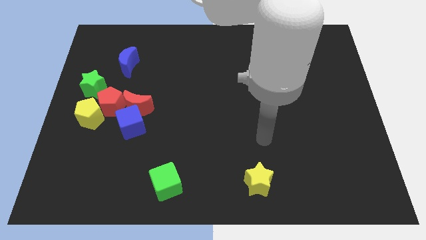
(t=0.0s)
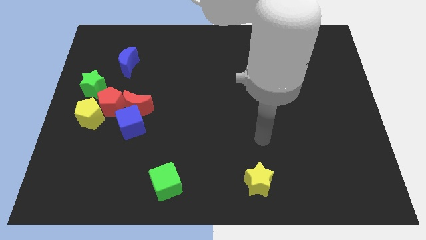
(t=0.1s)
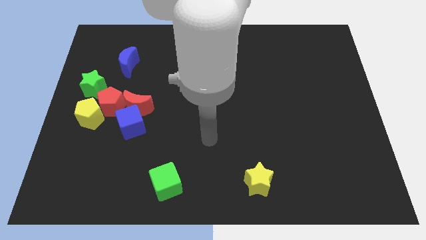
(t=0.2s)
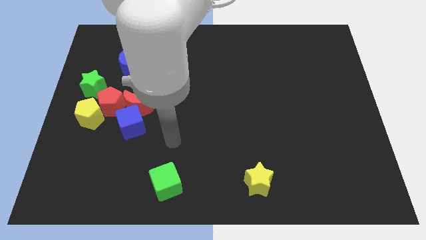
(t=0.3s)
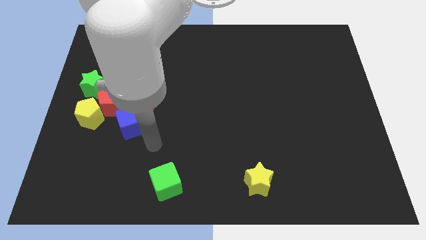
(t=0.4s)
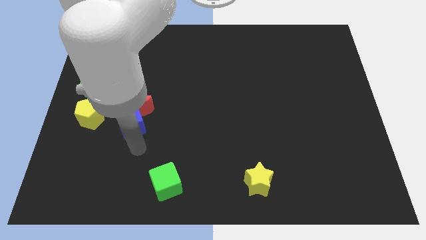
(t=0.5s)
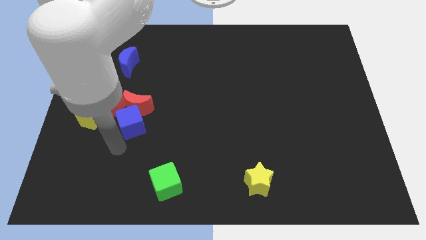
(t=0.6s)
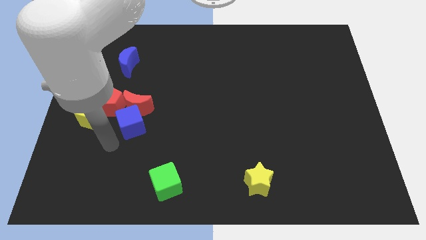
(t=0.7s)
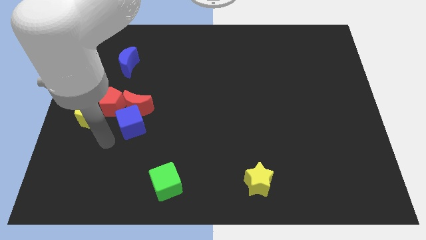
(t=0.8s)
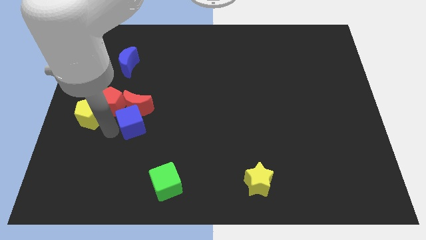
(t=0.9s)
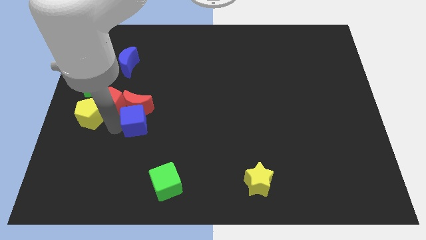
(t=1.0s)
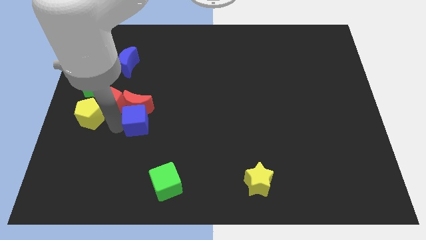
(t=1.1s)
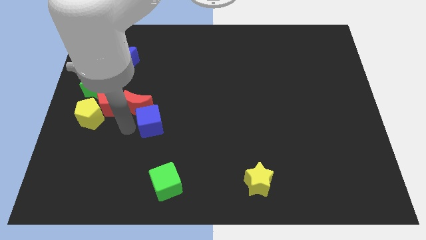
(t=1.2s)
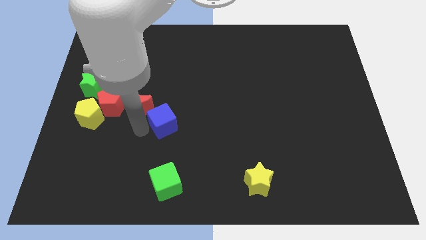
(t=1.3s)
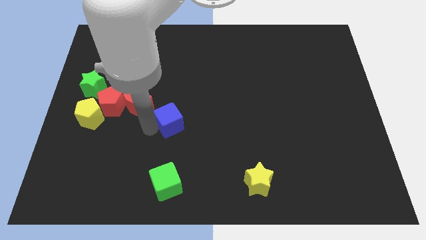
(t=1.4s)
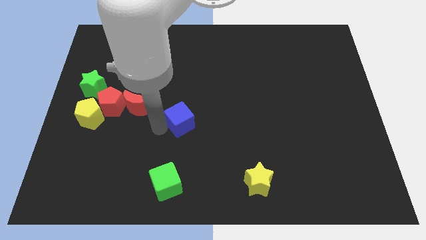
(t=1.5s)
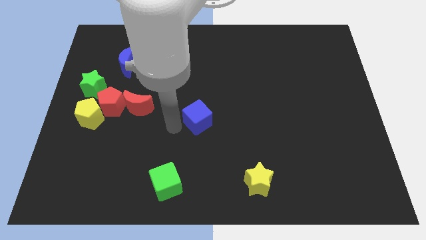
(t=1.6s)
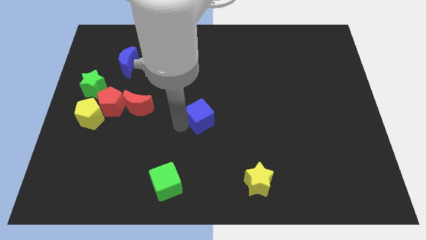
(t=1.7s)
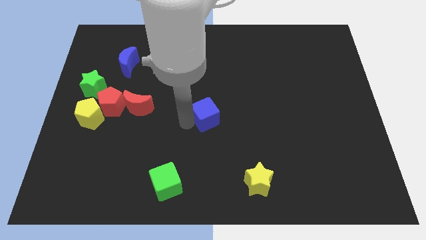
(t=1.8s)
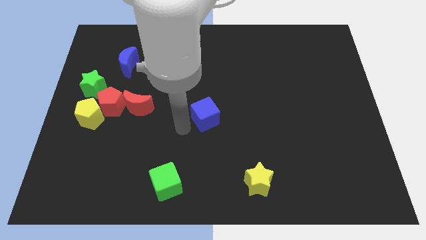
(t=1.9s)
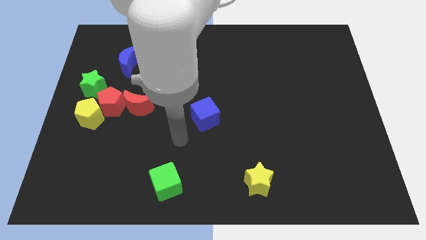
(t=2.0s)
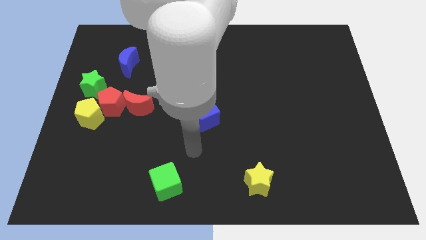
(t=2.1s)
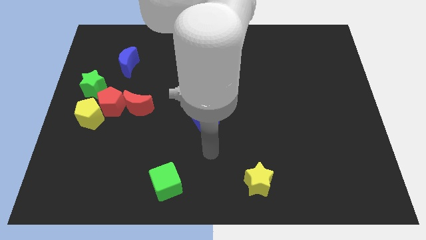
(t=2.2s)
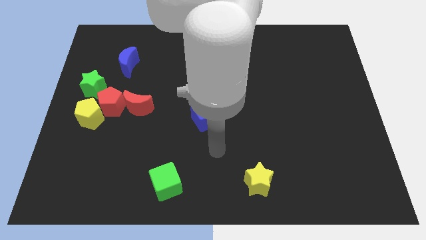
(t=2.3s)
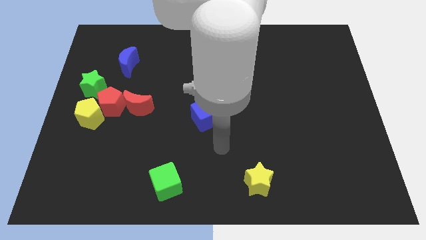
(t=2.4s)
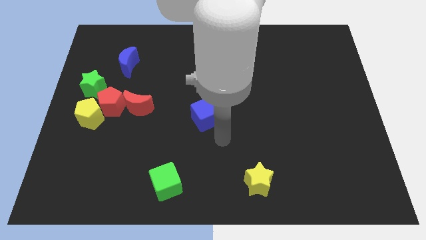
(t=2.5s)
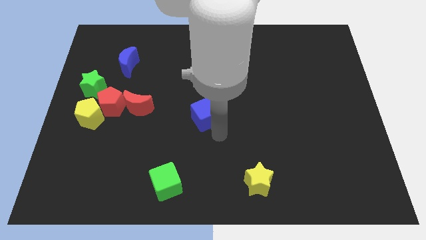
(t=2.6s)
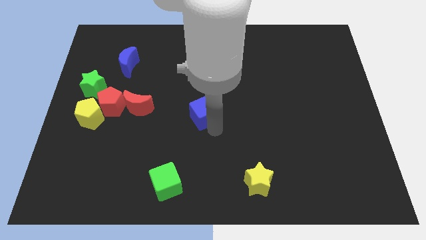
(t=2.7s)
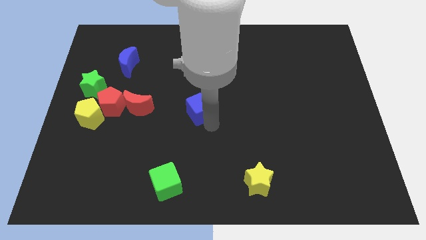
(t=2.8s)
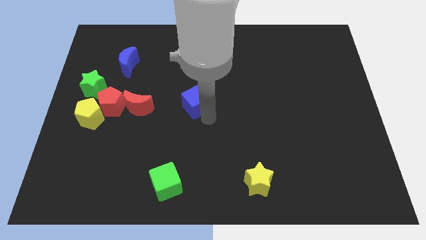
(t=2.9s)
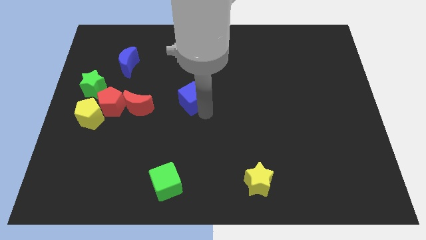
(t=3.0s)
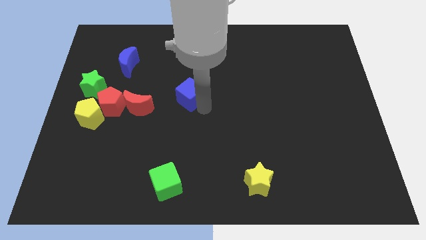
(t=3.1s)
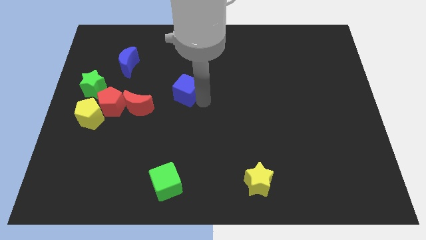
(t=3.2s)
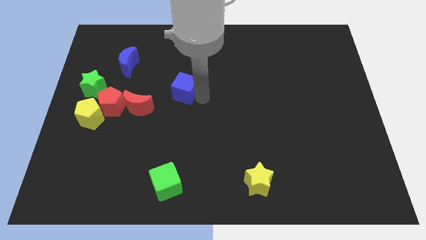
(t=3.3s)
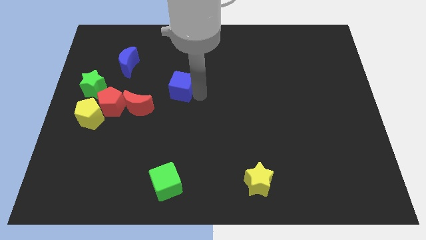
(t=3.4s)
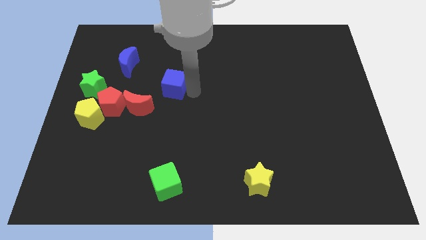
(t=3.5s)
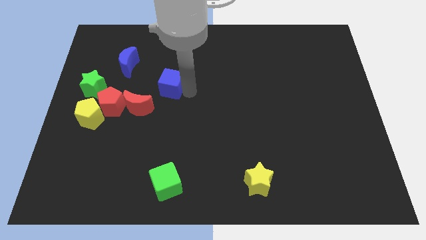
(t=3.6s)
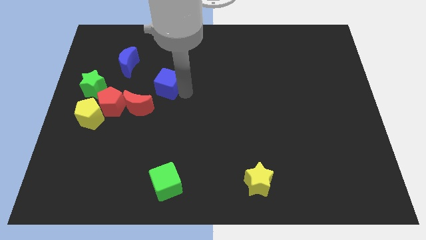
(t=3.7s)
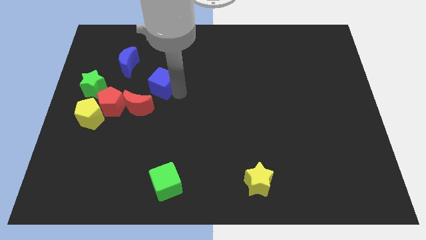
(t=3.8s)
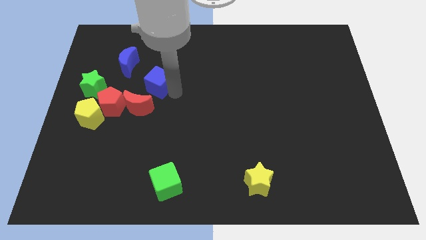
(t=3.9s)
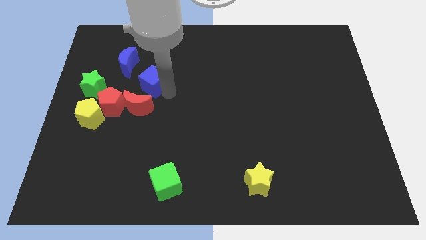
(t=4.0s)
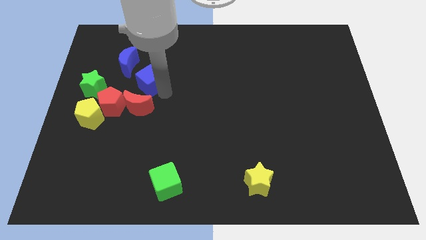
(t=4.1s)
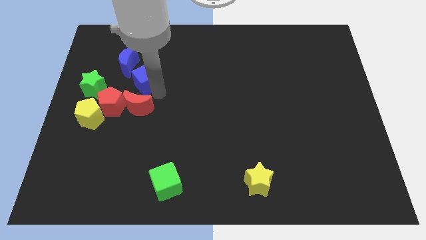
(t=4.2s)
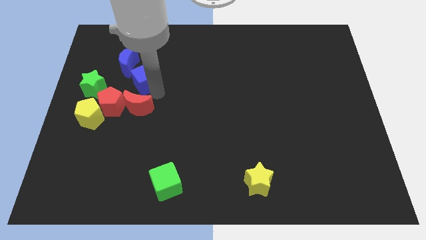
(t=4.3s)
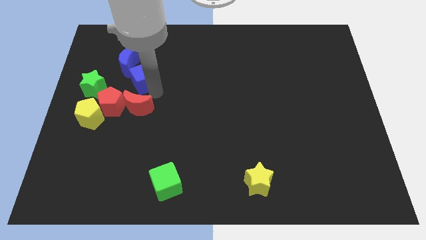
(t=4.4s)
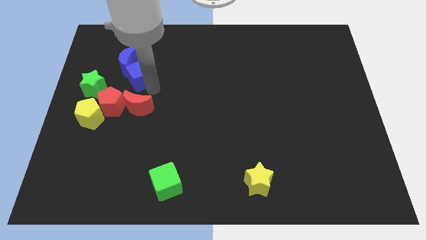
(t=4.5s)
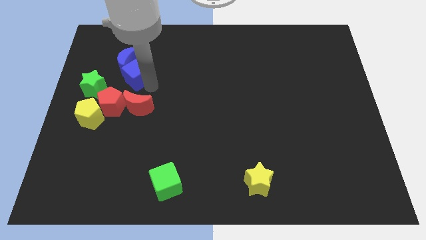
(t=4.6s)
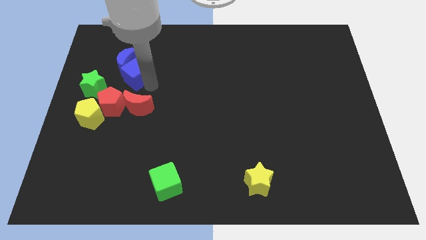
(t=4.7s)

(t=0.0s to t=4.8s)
push the blue cube to the blue moon

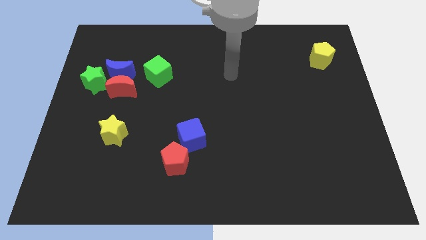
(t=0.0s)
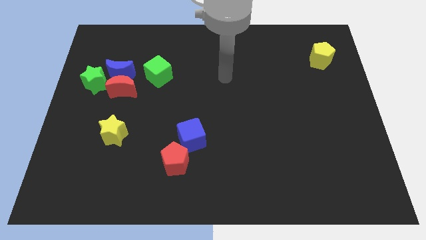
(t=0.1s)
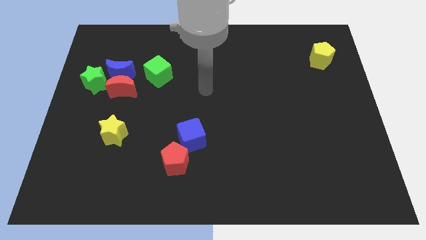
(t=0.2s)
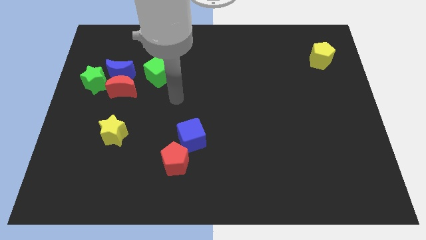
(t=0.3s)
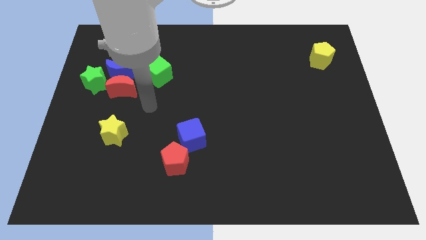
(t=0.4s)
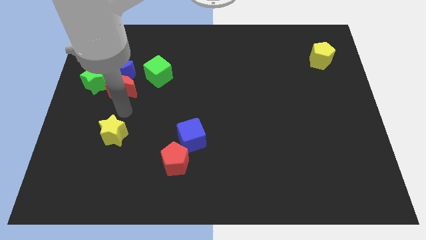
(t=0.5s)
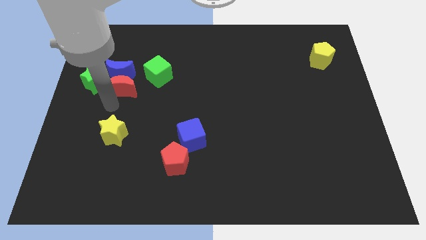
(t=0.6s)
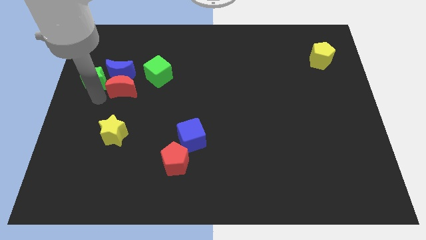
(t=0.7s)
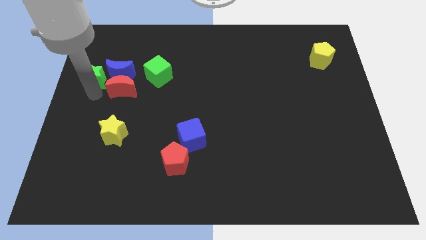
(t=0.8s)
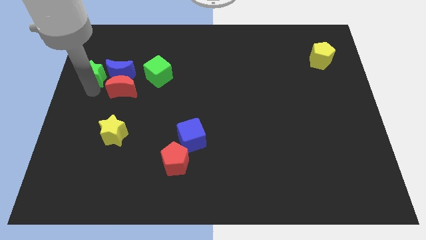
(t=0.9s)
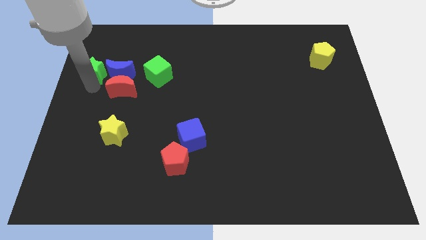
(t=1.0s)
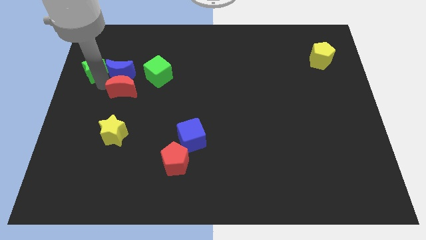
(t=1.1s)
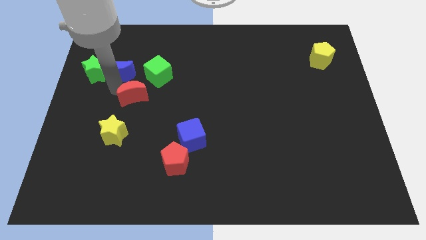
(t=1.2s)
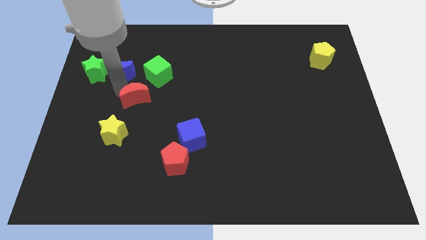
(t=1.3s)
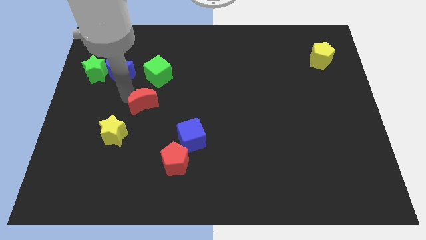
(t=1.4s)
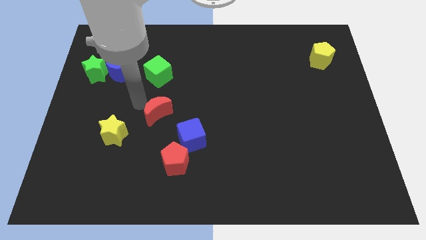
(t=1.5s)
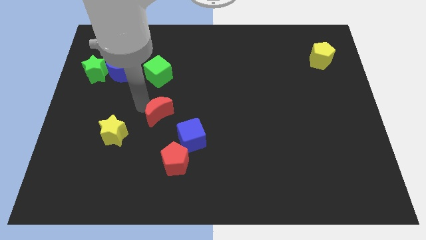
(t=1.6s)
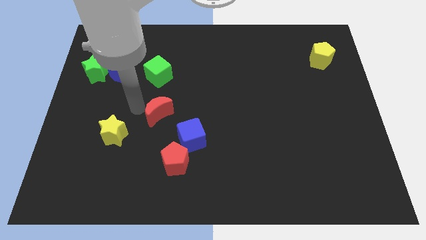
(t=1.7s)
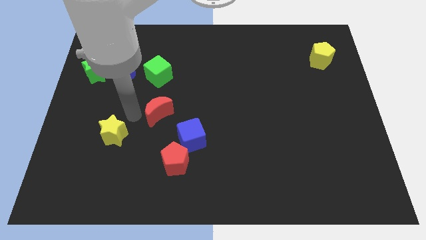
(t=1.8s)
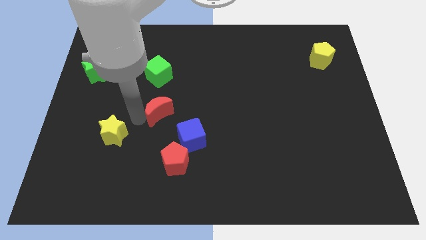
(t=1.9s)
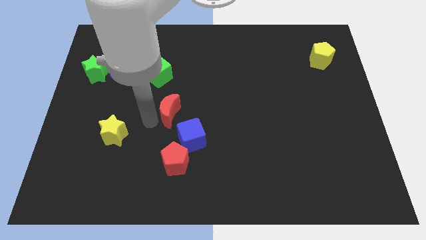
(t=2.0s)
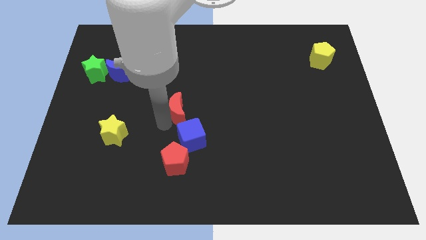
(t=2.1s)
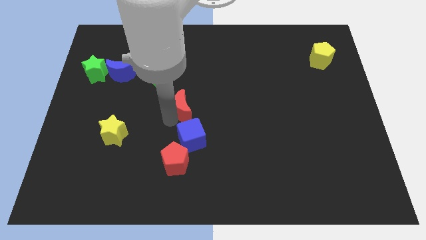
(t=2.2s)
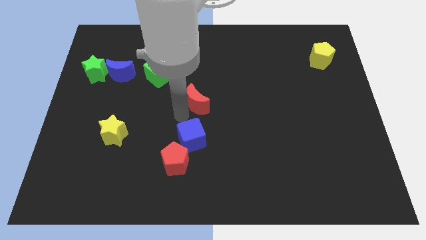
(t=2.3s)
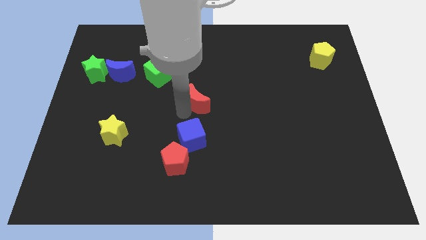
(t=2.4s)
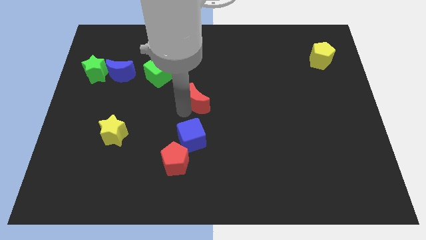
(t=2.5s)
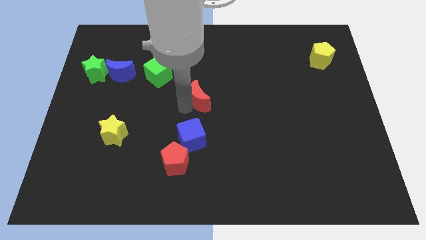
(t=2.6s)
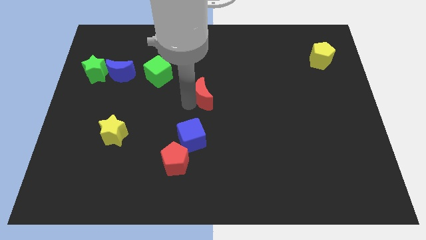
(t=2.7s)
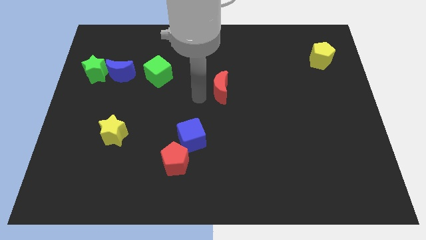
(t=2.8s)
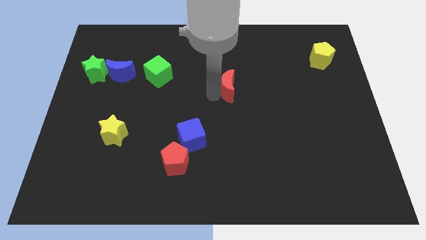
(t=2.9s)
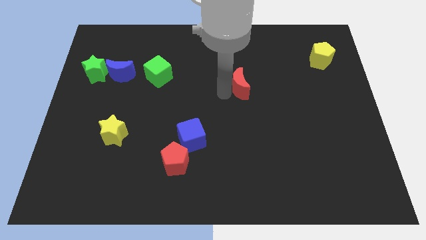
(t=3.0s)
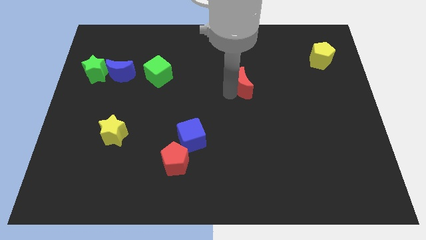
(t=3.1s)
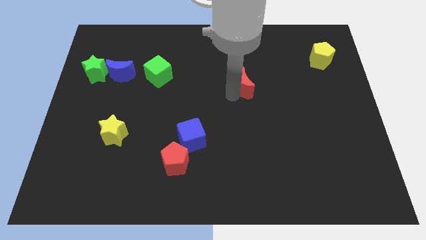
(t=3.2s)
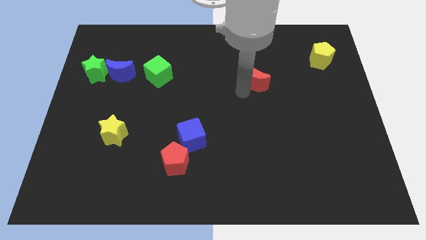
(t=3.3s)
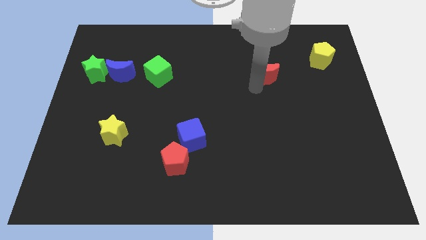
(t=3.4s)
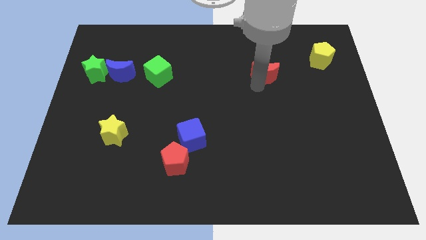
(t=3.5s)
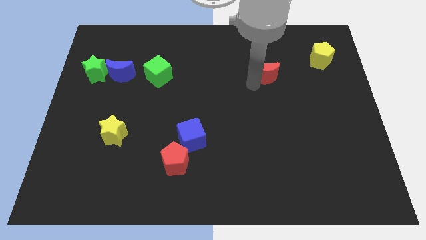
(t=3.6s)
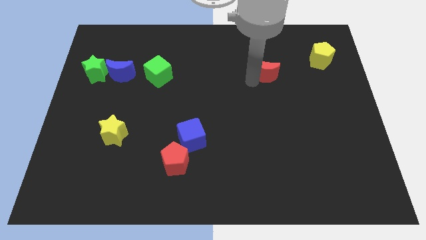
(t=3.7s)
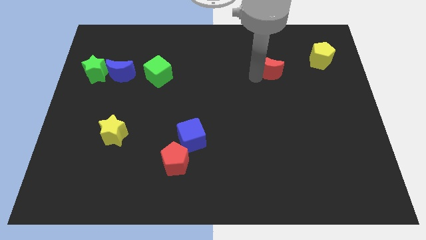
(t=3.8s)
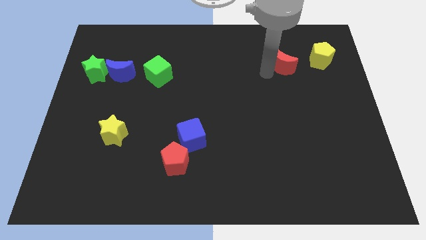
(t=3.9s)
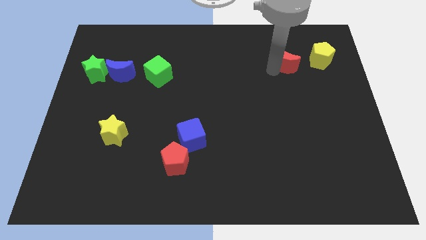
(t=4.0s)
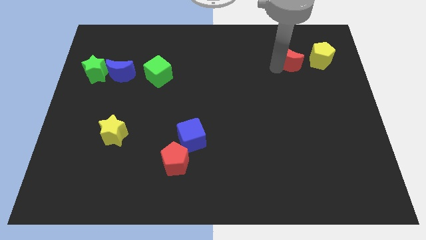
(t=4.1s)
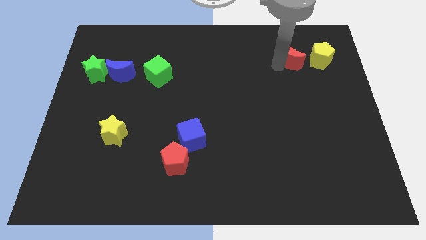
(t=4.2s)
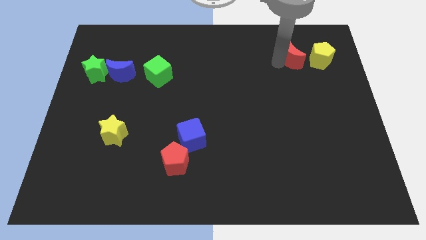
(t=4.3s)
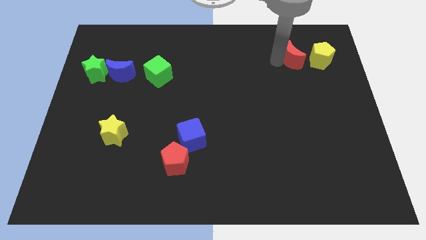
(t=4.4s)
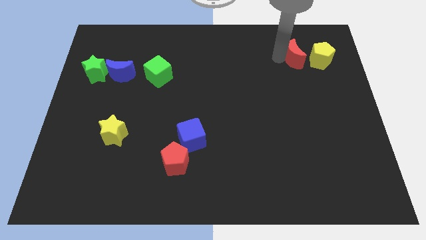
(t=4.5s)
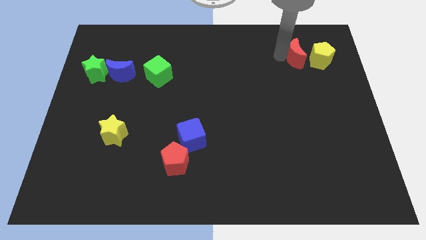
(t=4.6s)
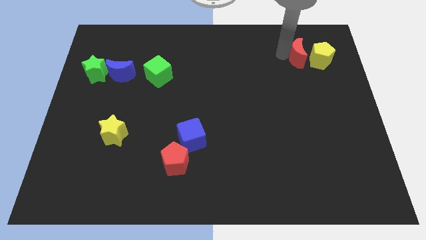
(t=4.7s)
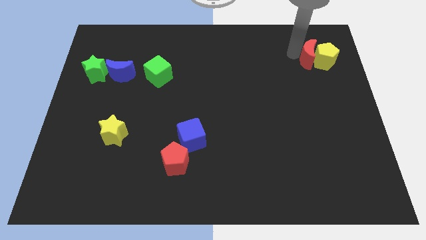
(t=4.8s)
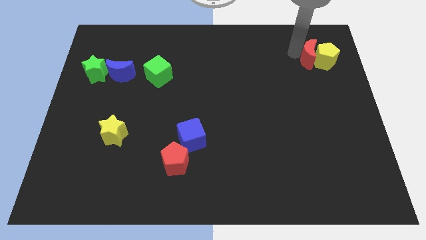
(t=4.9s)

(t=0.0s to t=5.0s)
slide the red moon to the yellow pentagon
